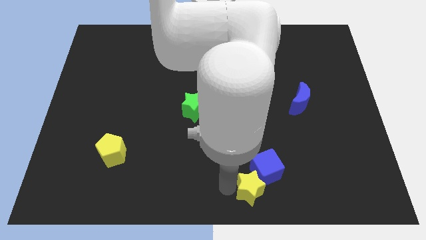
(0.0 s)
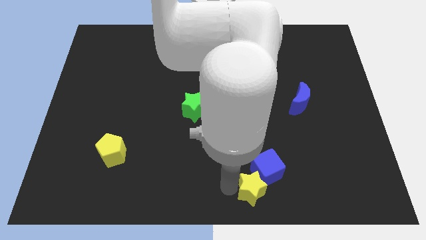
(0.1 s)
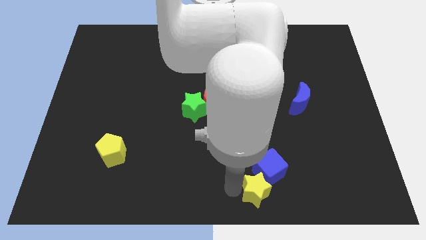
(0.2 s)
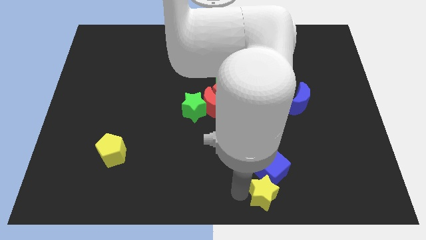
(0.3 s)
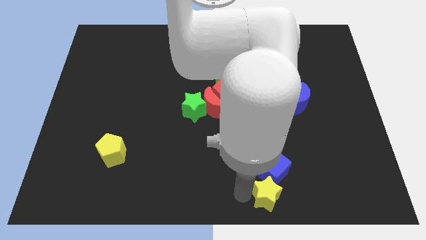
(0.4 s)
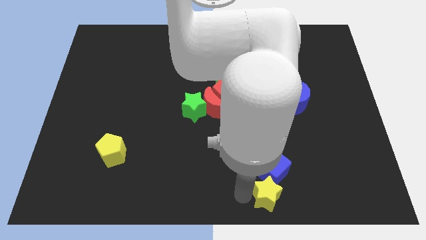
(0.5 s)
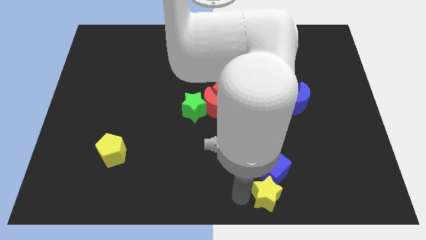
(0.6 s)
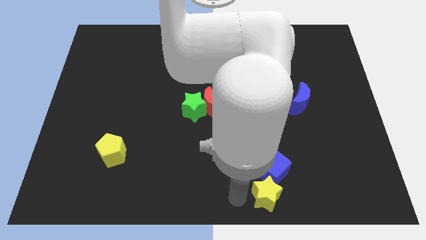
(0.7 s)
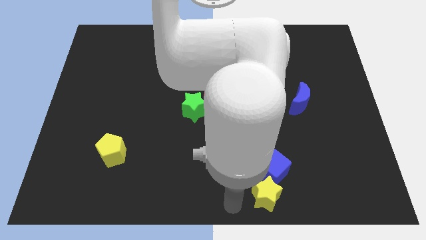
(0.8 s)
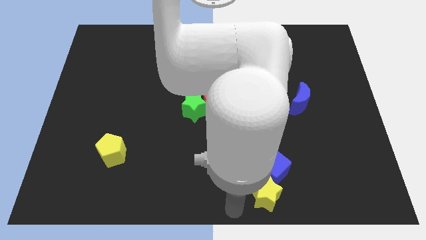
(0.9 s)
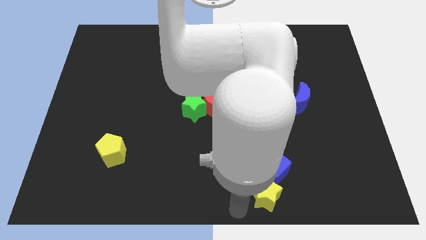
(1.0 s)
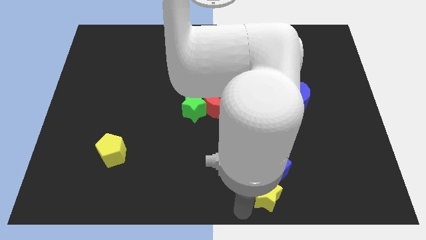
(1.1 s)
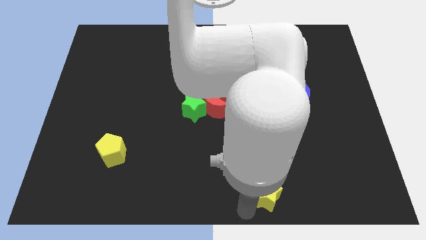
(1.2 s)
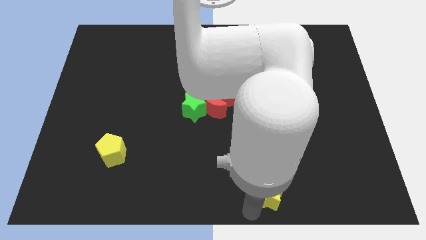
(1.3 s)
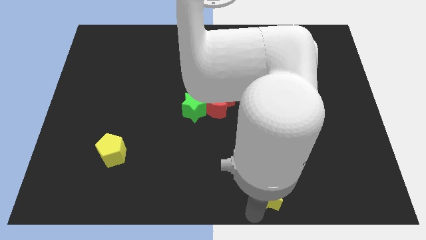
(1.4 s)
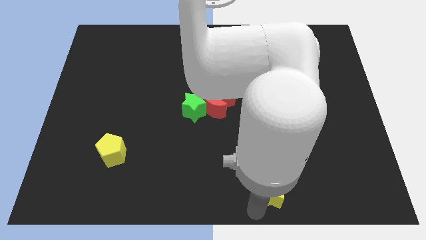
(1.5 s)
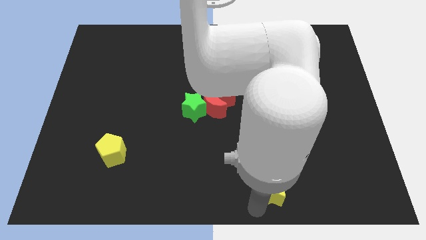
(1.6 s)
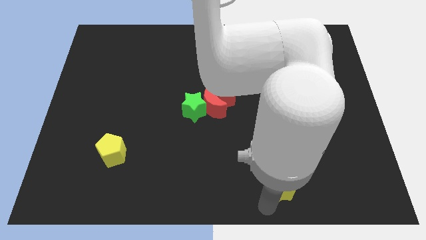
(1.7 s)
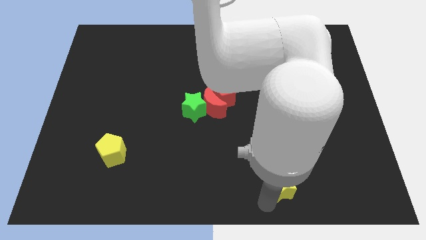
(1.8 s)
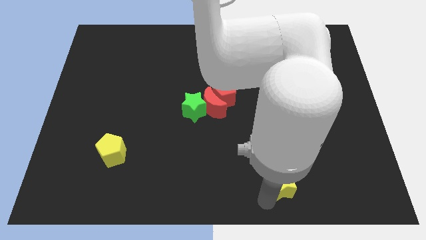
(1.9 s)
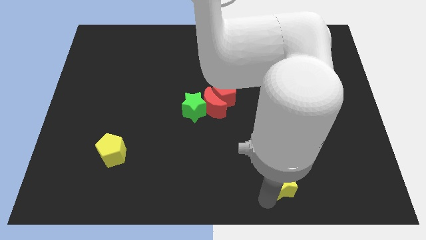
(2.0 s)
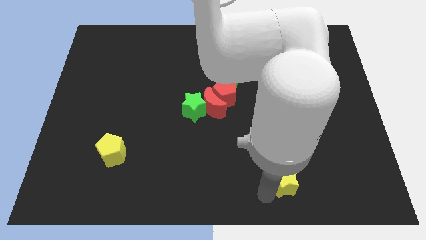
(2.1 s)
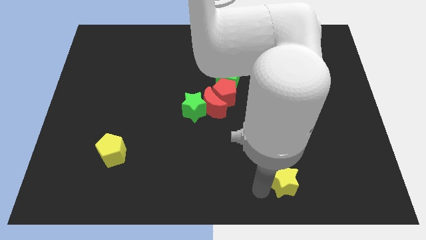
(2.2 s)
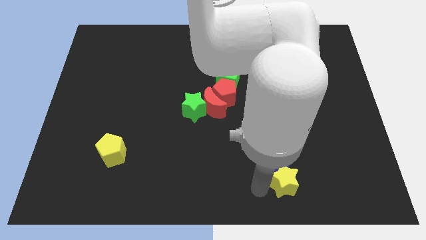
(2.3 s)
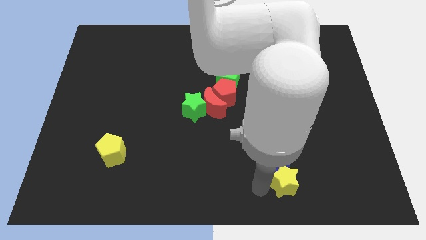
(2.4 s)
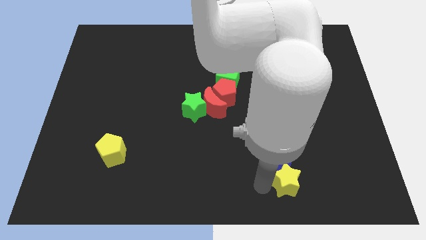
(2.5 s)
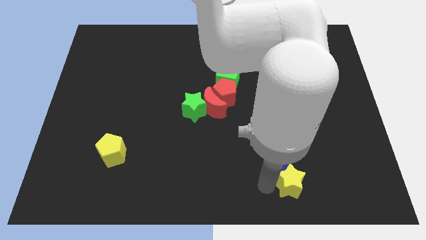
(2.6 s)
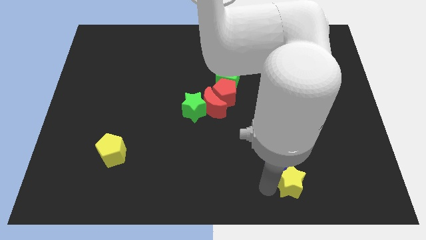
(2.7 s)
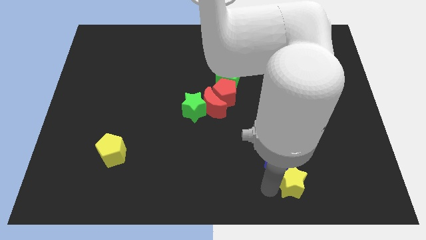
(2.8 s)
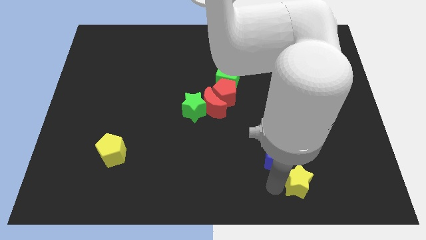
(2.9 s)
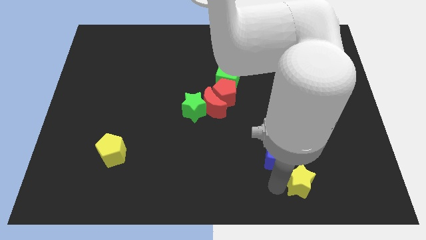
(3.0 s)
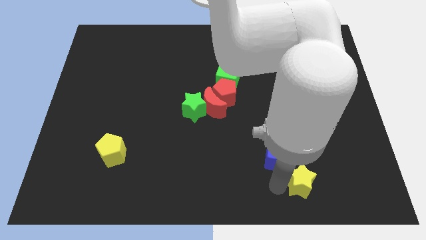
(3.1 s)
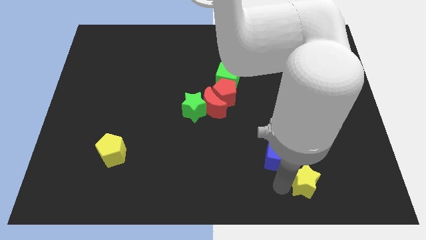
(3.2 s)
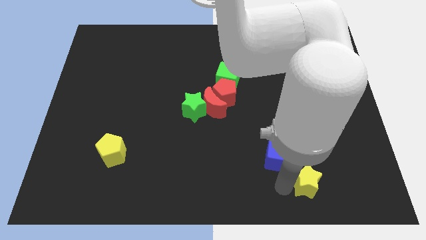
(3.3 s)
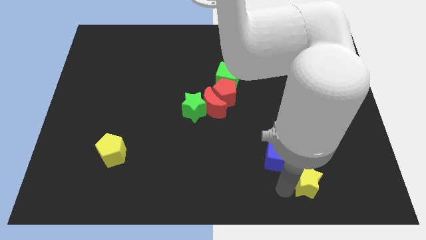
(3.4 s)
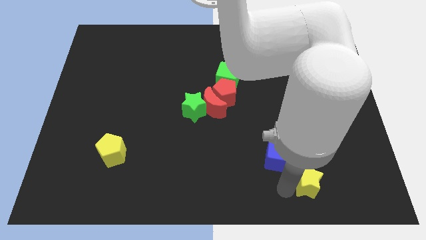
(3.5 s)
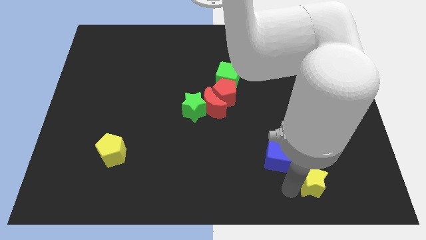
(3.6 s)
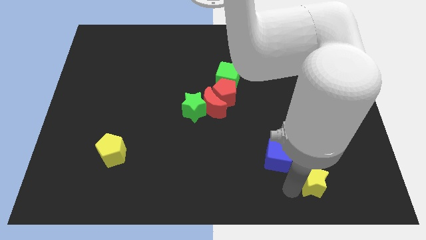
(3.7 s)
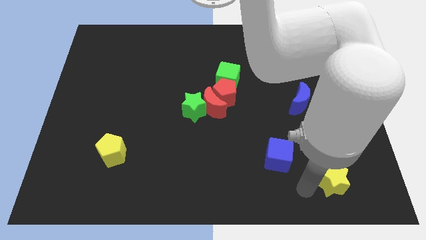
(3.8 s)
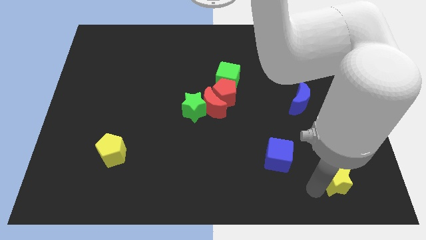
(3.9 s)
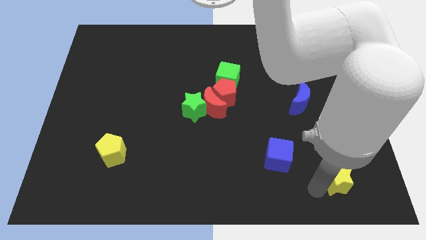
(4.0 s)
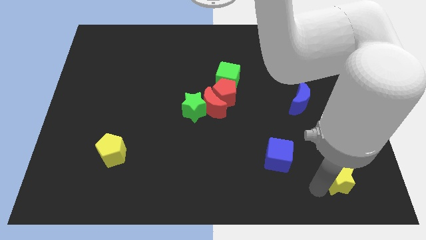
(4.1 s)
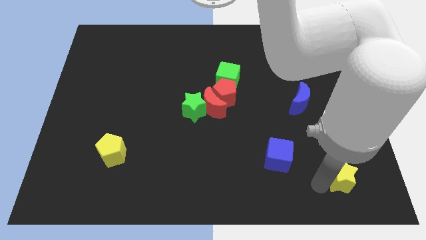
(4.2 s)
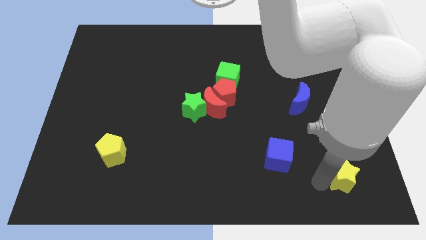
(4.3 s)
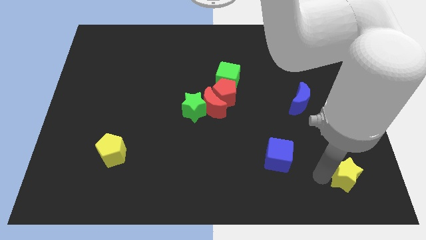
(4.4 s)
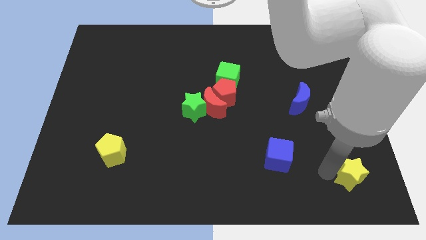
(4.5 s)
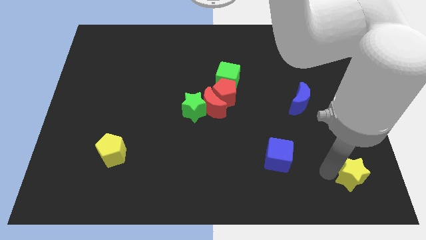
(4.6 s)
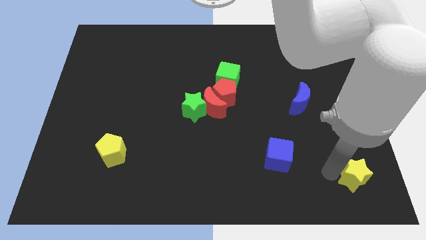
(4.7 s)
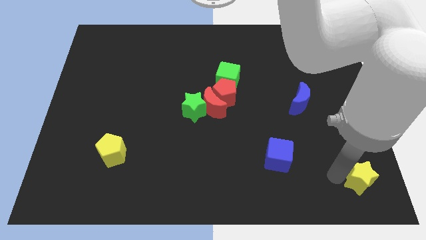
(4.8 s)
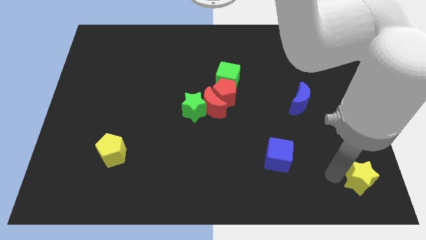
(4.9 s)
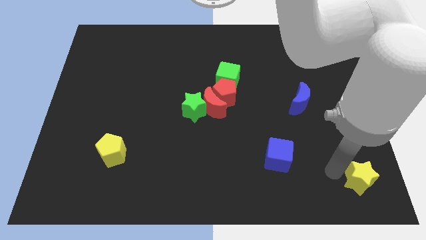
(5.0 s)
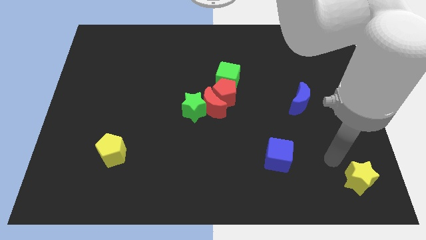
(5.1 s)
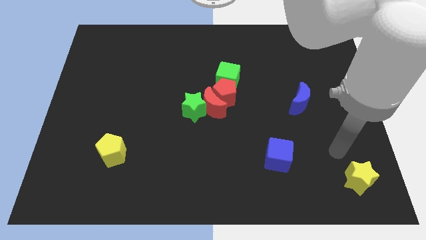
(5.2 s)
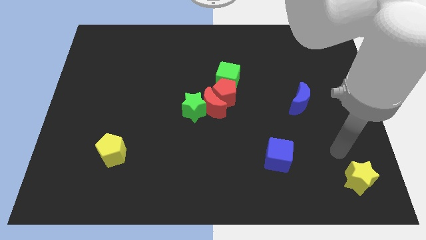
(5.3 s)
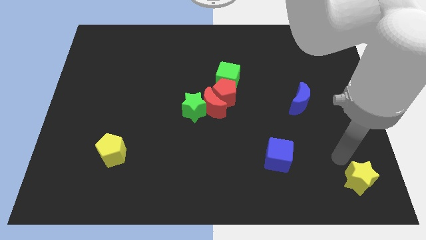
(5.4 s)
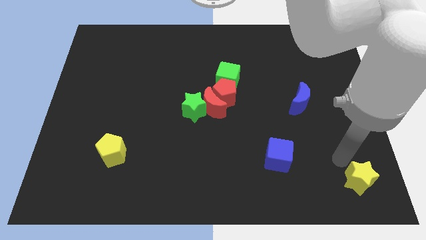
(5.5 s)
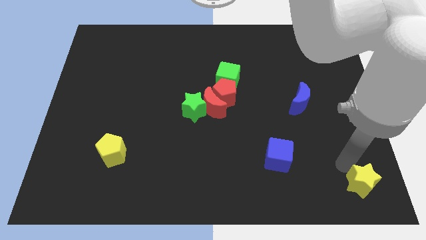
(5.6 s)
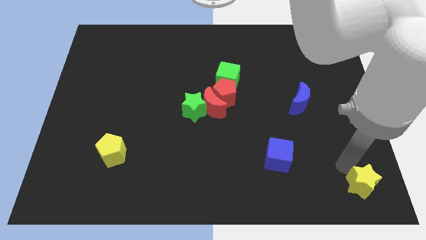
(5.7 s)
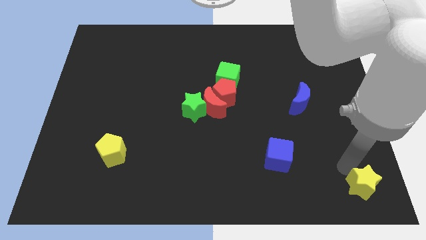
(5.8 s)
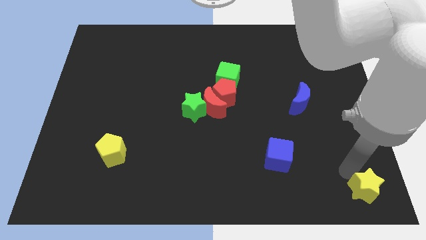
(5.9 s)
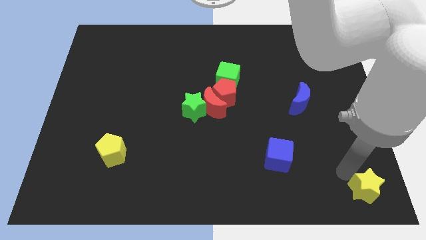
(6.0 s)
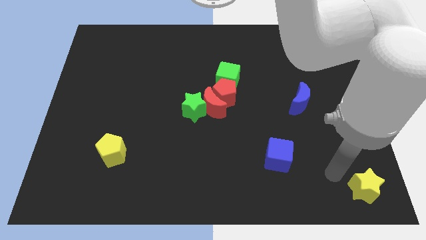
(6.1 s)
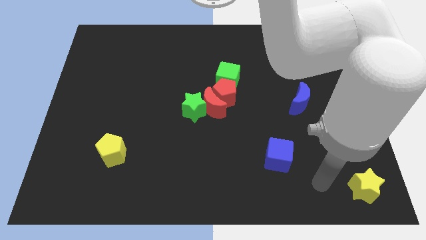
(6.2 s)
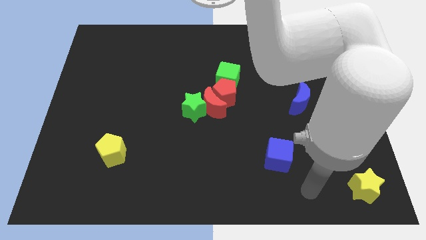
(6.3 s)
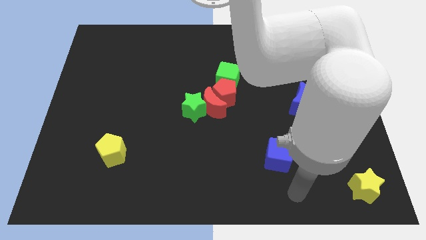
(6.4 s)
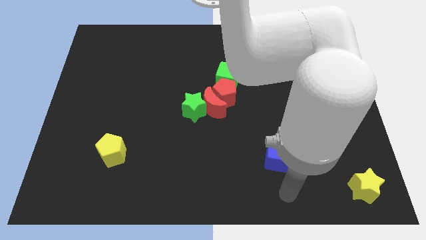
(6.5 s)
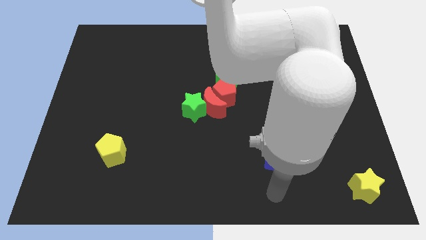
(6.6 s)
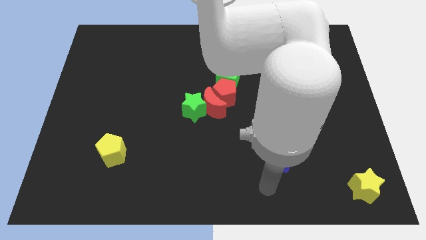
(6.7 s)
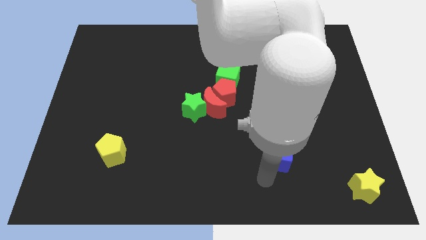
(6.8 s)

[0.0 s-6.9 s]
move the yellow star to the bottom right corner

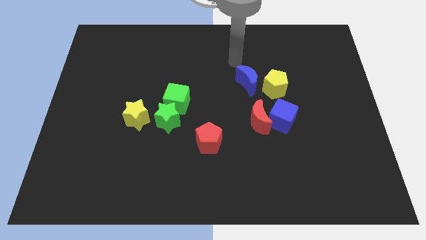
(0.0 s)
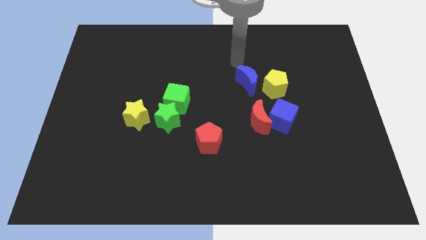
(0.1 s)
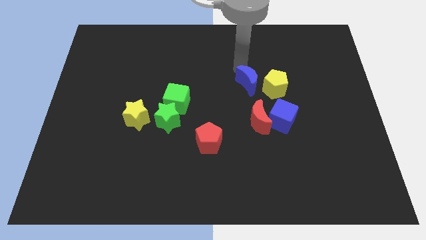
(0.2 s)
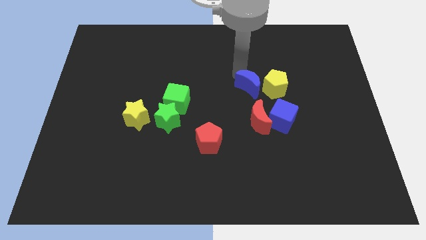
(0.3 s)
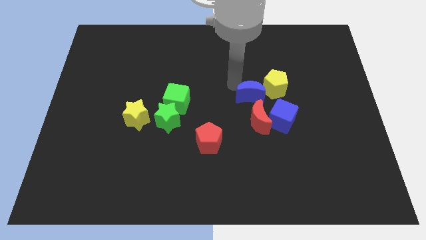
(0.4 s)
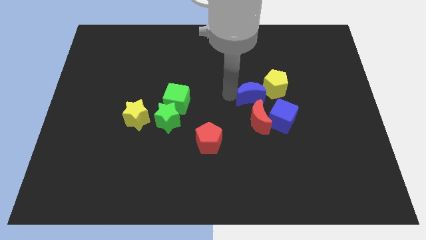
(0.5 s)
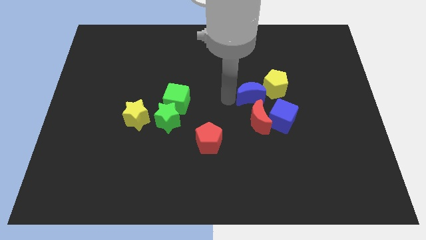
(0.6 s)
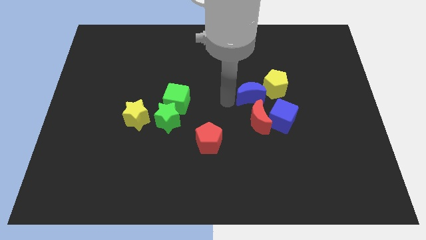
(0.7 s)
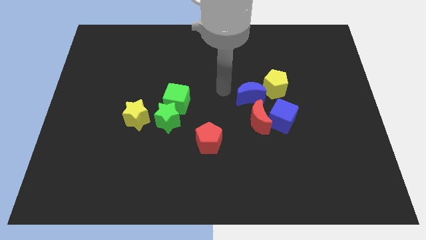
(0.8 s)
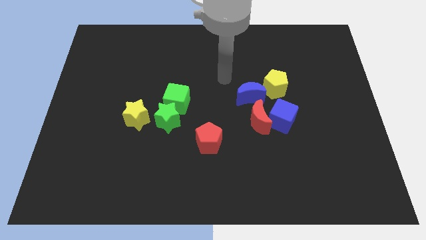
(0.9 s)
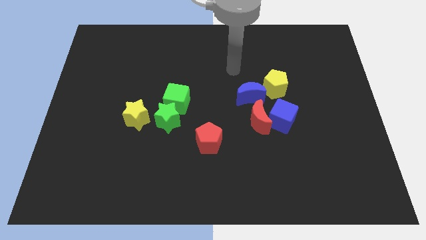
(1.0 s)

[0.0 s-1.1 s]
slide blue moon into red moon

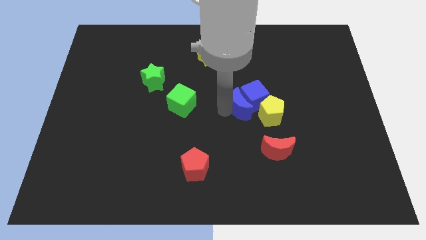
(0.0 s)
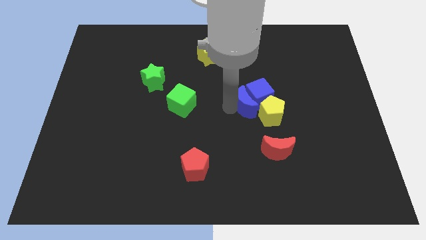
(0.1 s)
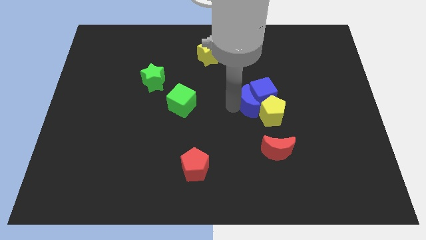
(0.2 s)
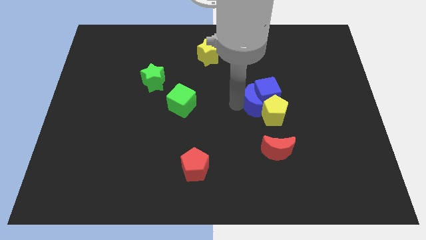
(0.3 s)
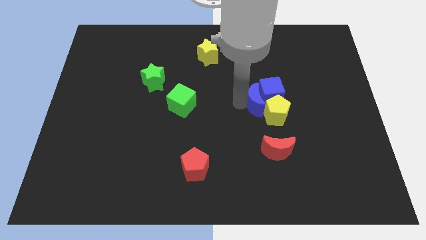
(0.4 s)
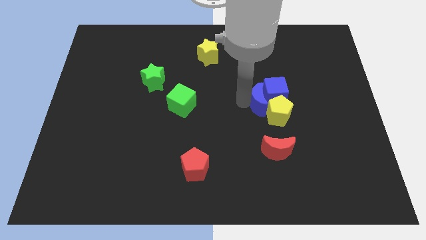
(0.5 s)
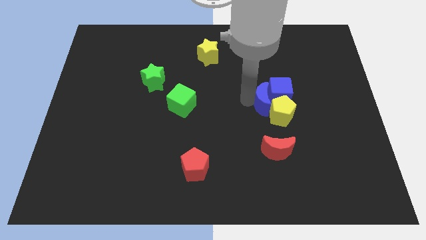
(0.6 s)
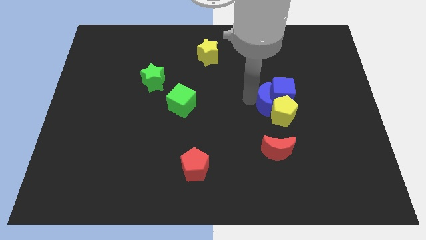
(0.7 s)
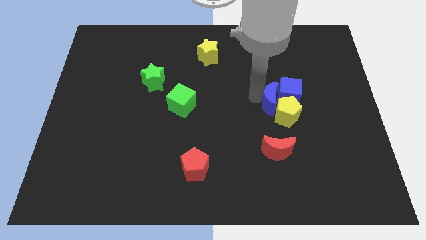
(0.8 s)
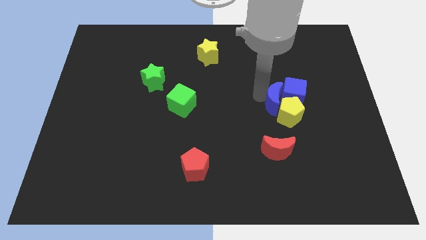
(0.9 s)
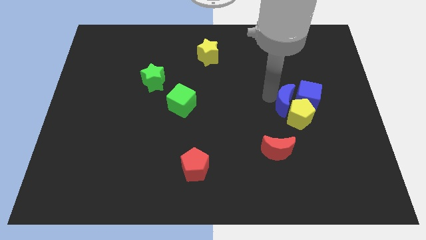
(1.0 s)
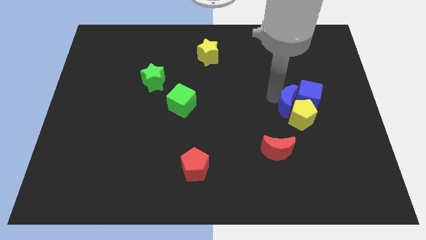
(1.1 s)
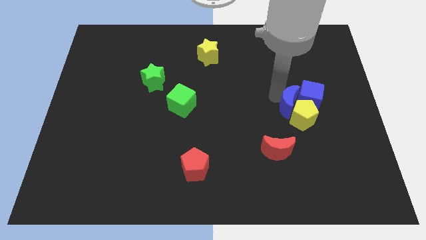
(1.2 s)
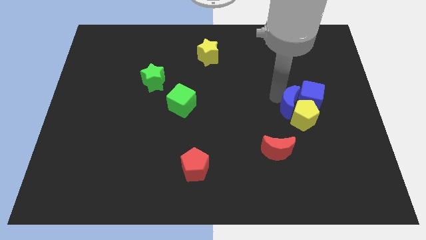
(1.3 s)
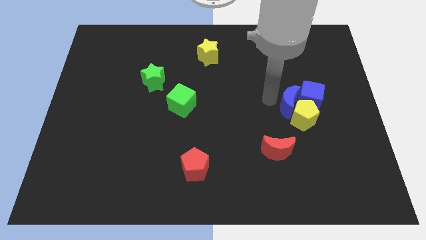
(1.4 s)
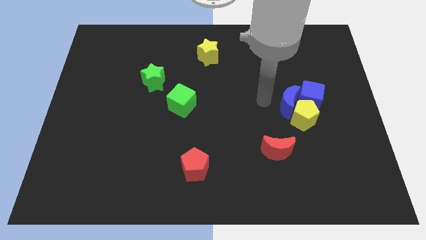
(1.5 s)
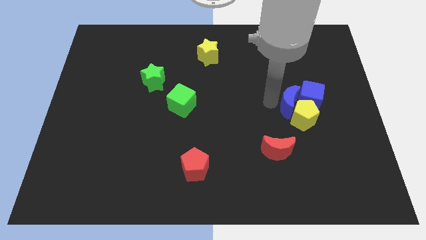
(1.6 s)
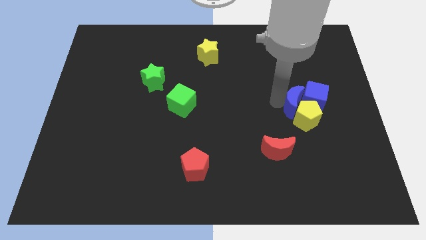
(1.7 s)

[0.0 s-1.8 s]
move the blue cube and yellow pentagon with blue crescent
